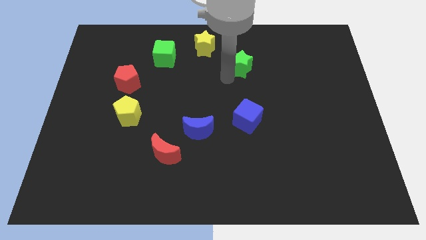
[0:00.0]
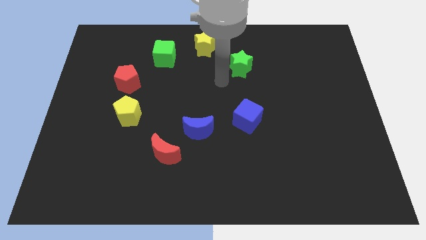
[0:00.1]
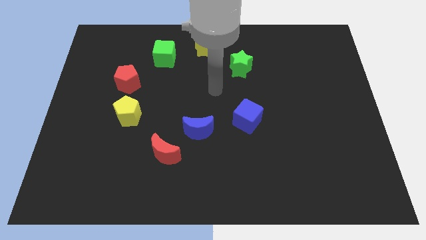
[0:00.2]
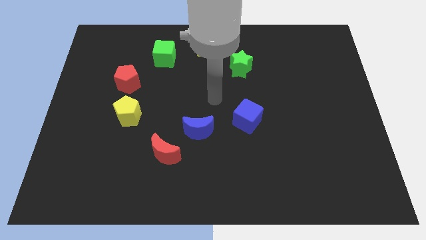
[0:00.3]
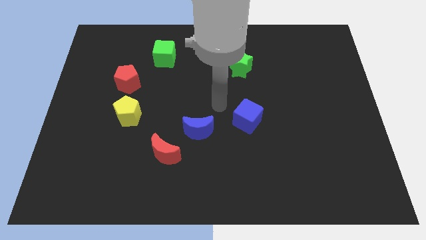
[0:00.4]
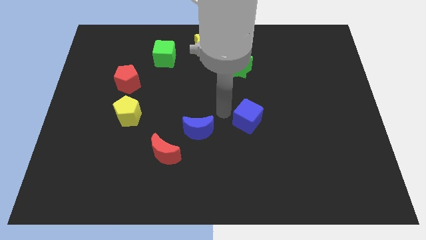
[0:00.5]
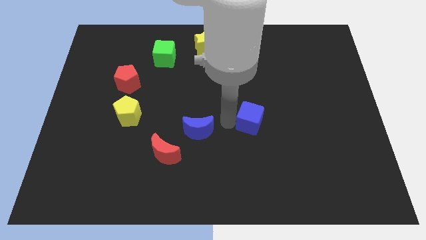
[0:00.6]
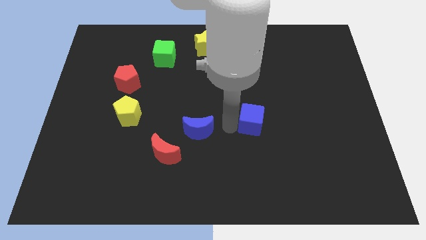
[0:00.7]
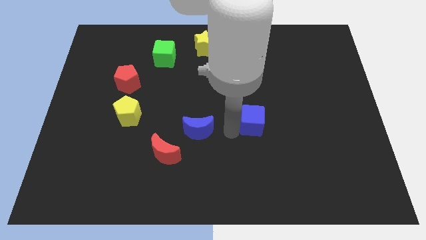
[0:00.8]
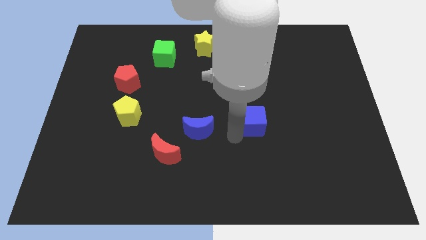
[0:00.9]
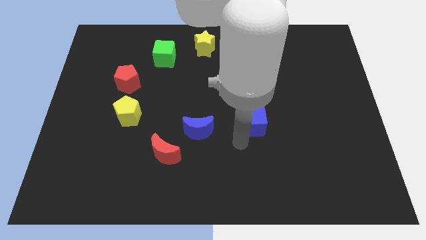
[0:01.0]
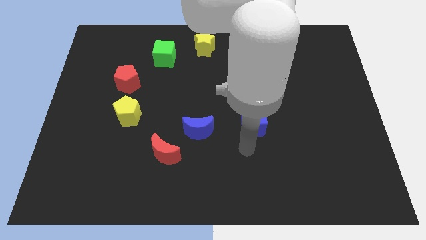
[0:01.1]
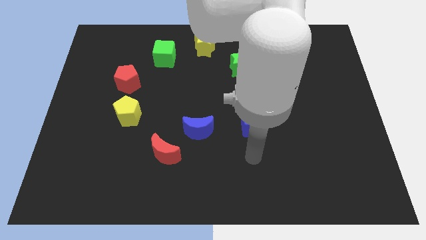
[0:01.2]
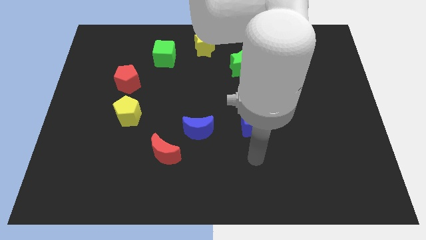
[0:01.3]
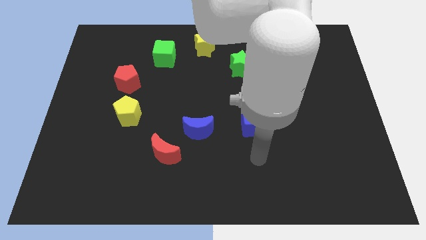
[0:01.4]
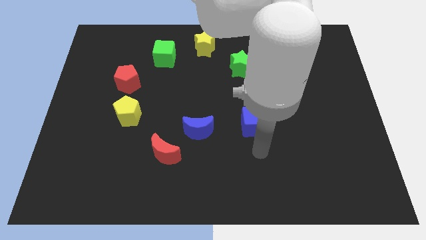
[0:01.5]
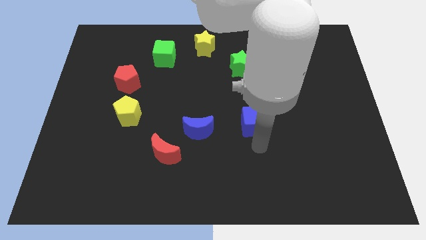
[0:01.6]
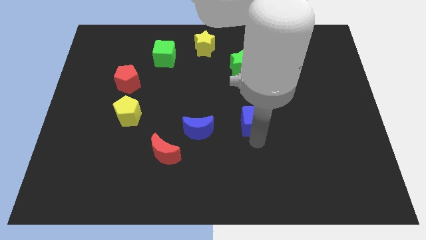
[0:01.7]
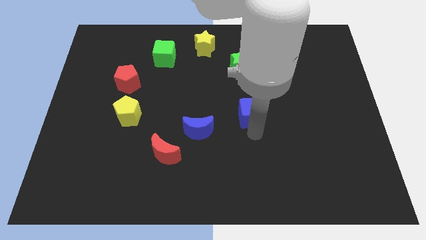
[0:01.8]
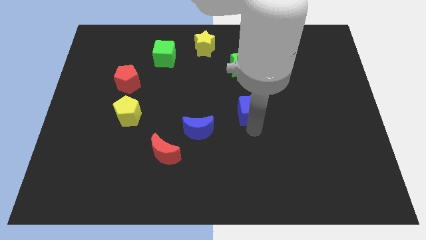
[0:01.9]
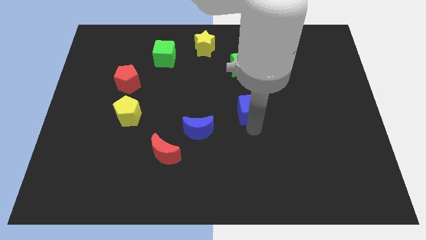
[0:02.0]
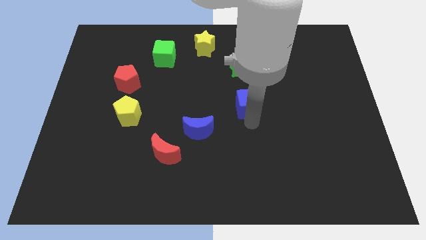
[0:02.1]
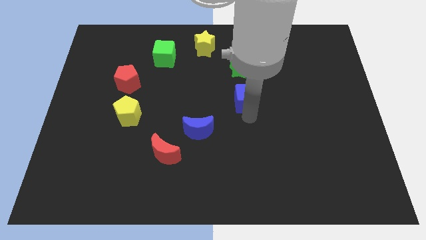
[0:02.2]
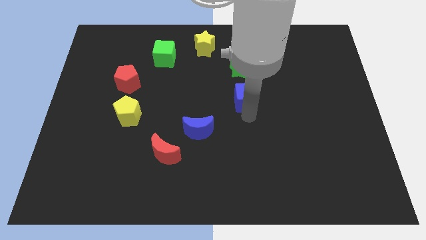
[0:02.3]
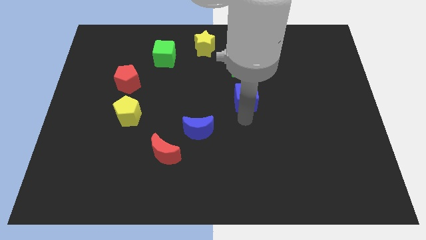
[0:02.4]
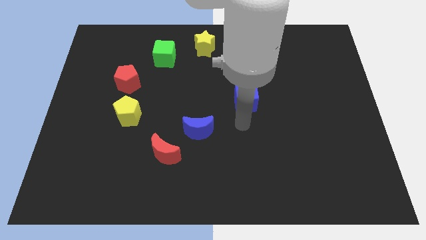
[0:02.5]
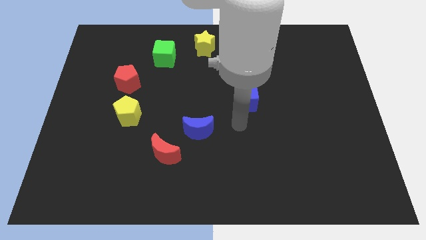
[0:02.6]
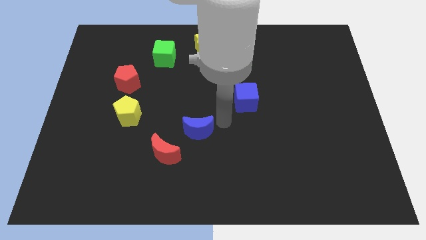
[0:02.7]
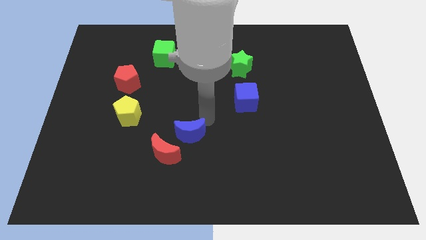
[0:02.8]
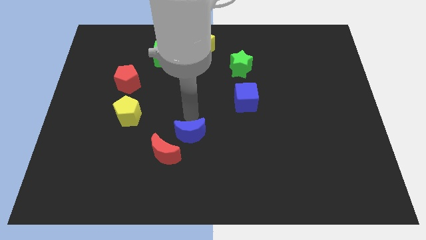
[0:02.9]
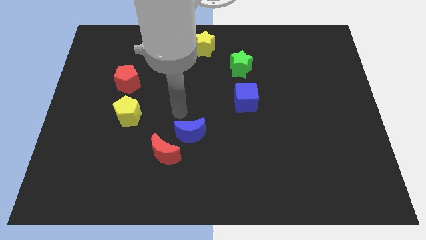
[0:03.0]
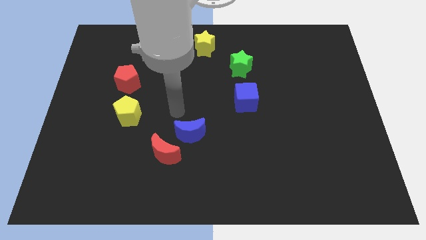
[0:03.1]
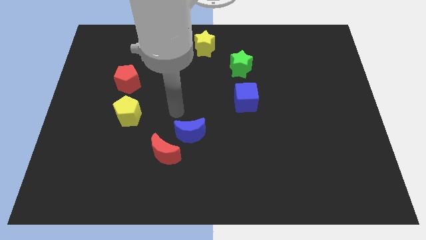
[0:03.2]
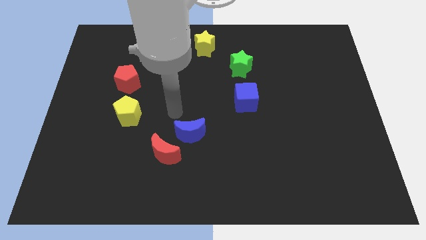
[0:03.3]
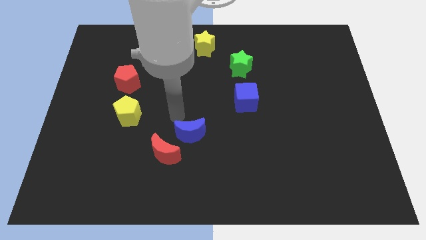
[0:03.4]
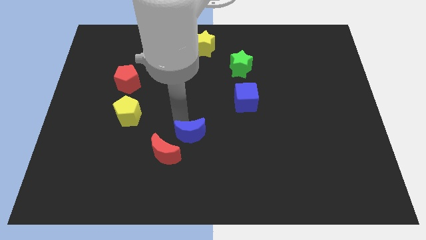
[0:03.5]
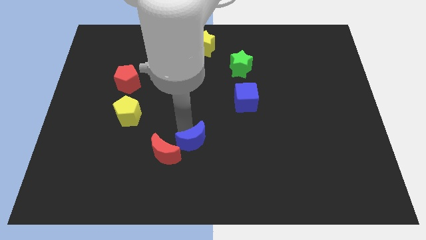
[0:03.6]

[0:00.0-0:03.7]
push the blue cube slightly to the top

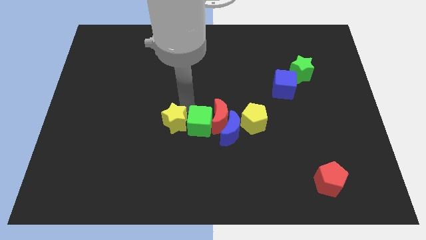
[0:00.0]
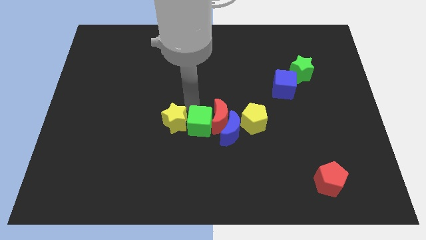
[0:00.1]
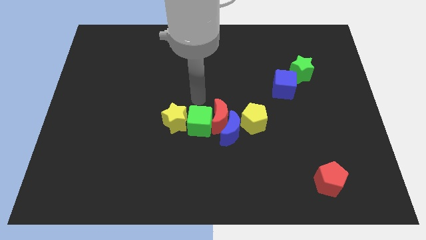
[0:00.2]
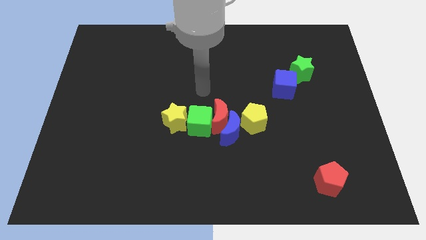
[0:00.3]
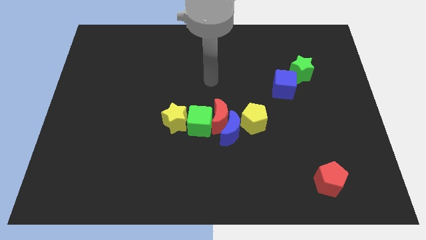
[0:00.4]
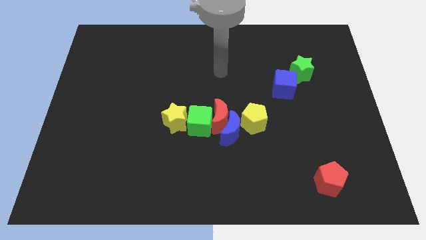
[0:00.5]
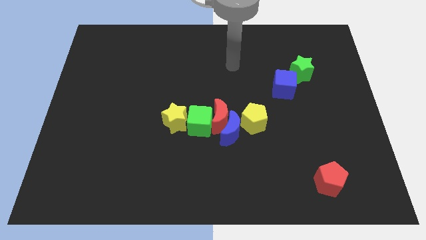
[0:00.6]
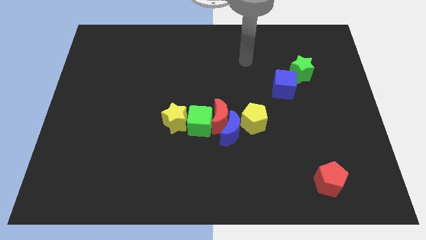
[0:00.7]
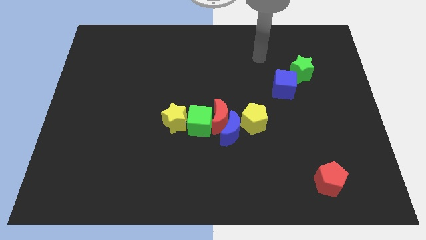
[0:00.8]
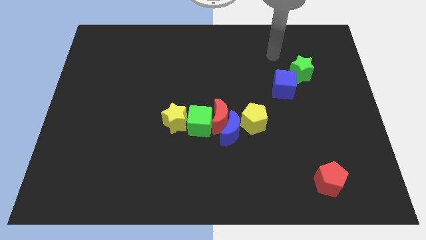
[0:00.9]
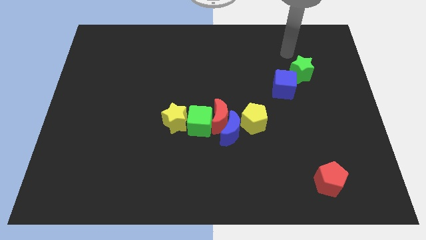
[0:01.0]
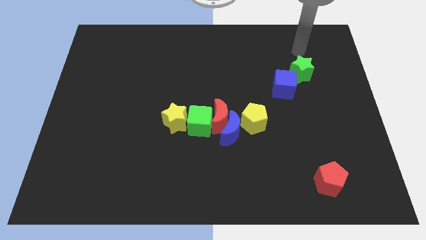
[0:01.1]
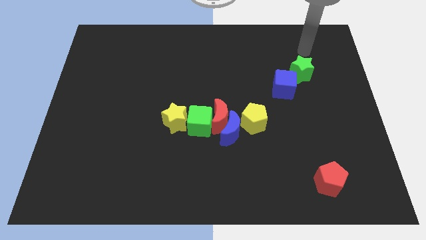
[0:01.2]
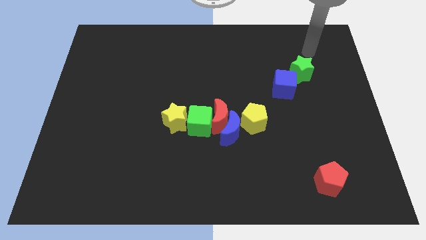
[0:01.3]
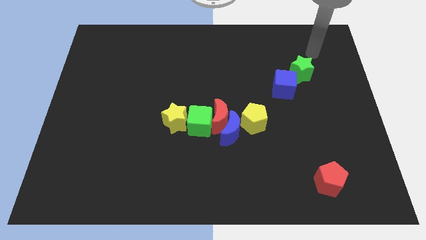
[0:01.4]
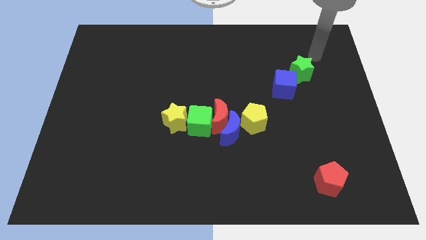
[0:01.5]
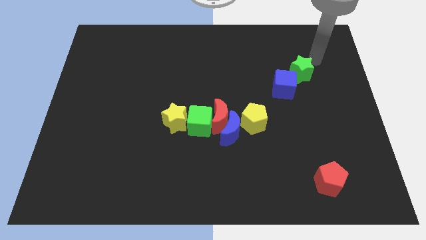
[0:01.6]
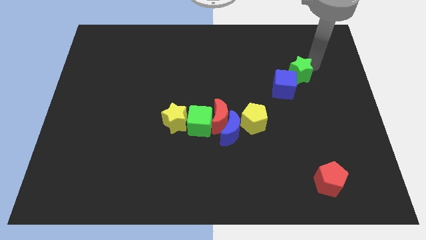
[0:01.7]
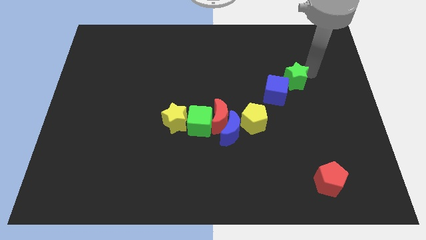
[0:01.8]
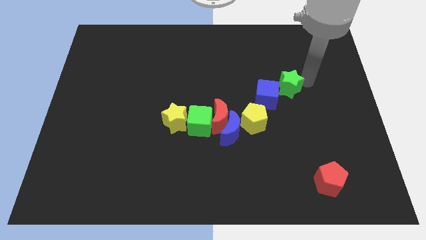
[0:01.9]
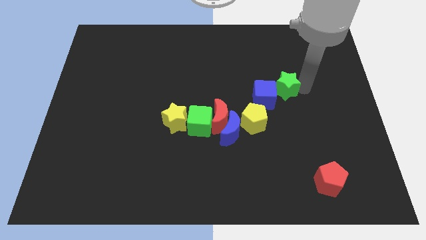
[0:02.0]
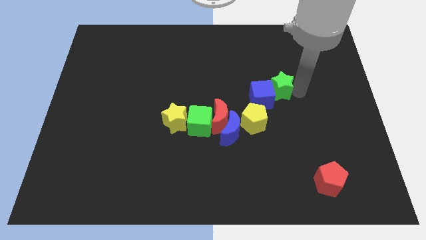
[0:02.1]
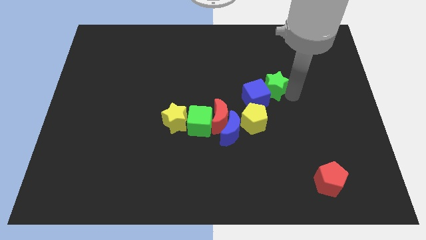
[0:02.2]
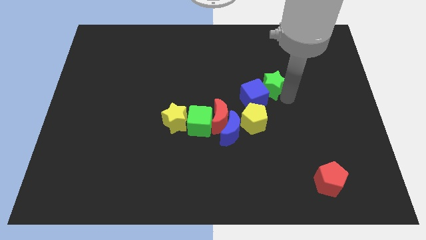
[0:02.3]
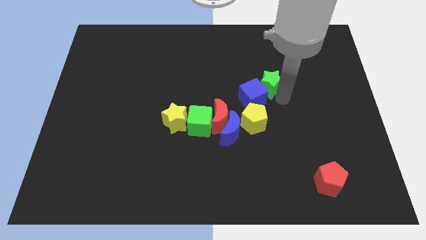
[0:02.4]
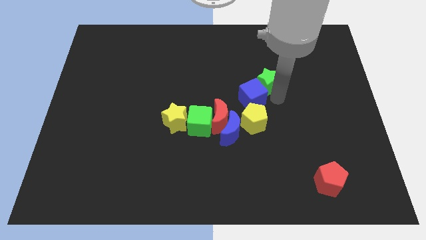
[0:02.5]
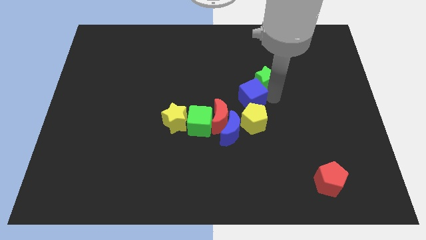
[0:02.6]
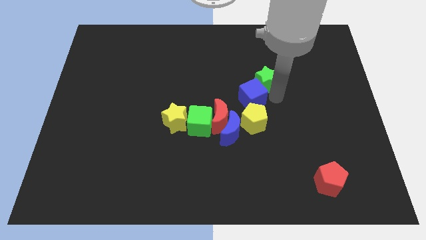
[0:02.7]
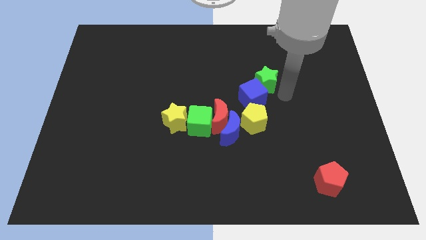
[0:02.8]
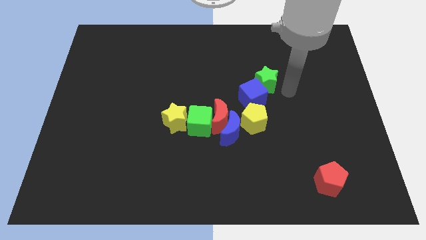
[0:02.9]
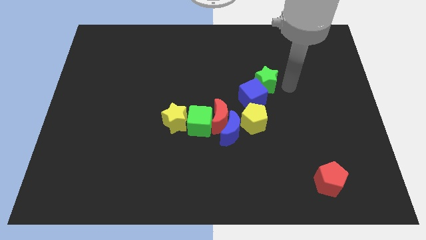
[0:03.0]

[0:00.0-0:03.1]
place the blue cube and green star at the top side of the yellow pentagon

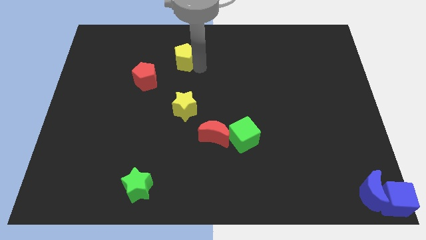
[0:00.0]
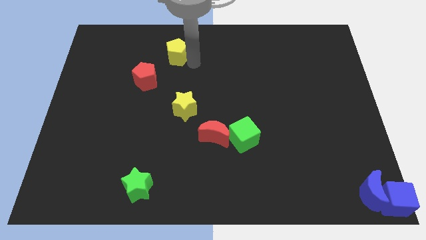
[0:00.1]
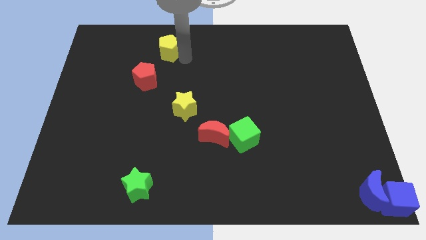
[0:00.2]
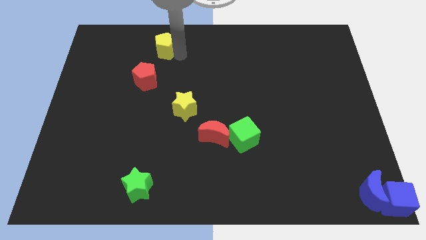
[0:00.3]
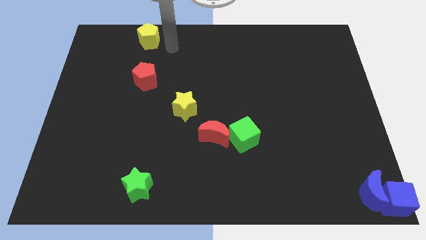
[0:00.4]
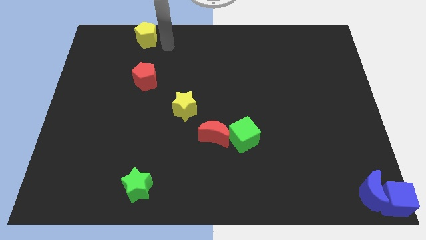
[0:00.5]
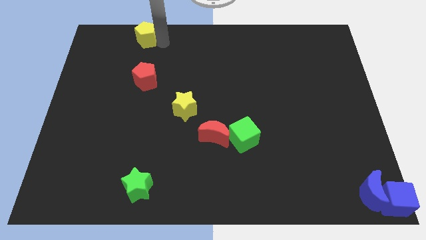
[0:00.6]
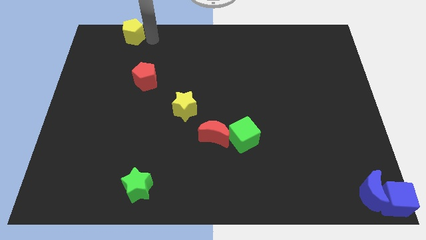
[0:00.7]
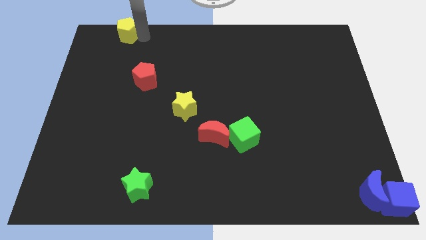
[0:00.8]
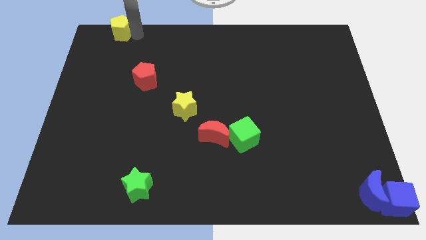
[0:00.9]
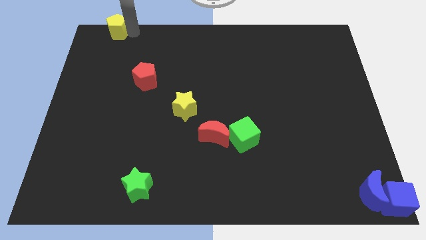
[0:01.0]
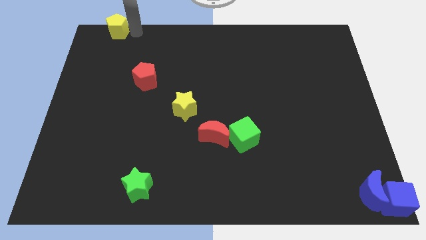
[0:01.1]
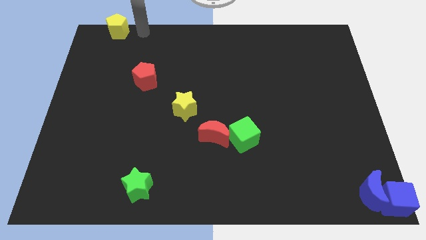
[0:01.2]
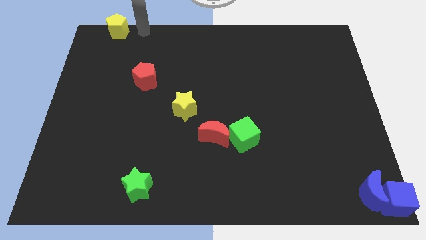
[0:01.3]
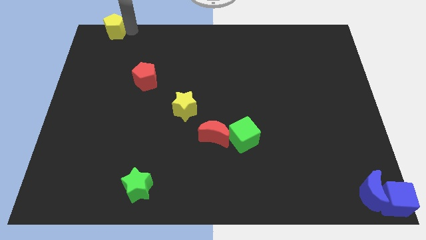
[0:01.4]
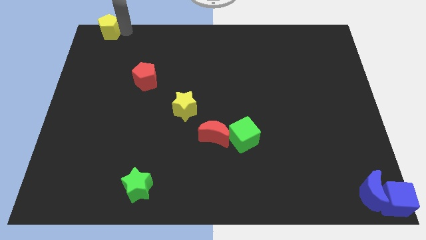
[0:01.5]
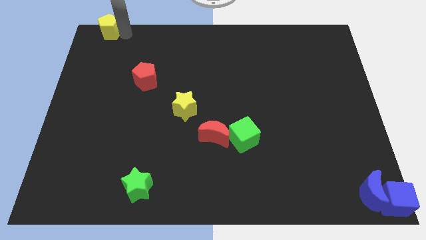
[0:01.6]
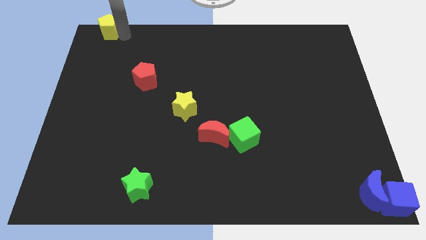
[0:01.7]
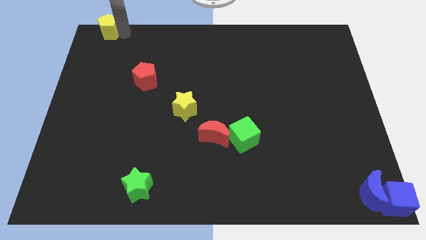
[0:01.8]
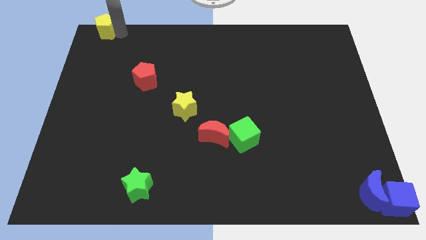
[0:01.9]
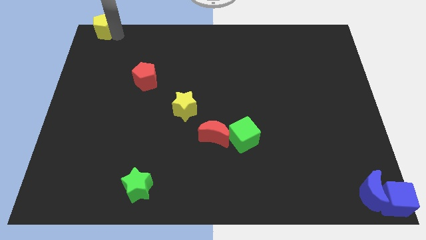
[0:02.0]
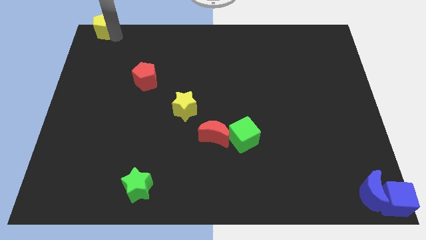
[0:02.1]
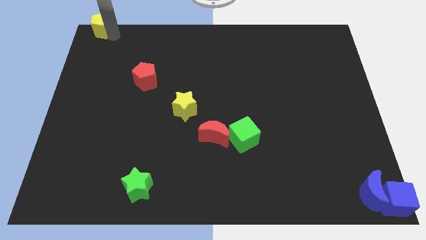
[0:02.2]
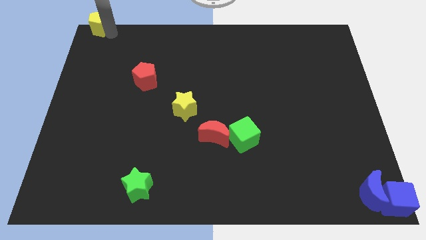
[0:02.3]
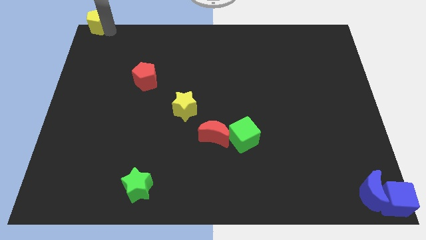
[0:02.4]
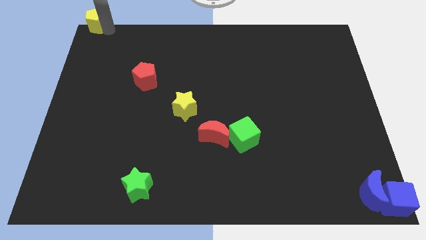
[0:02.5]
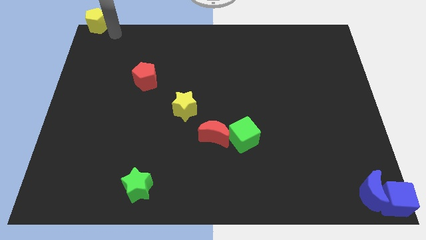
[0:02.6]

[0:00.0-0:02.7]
move the yellow pentagon to the top left corner
